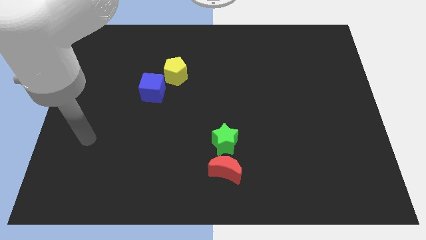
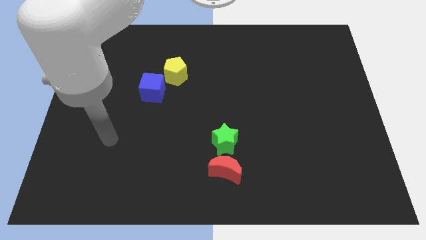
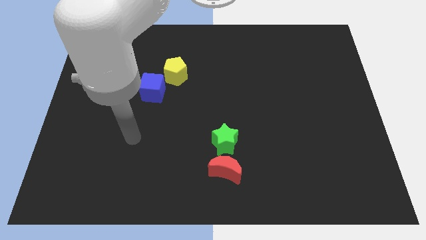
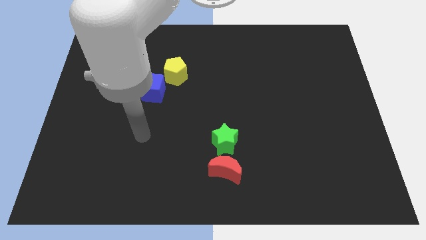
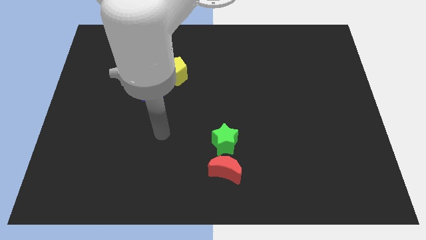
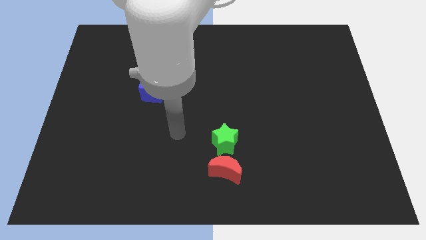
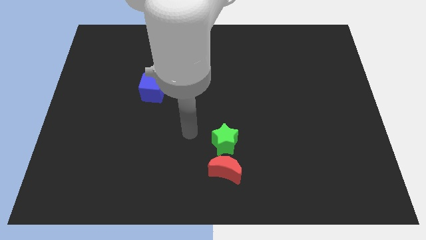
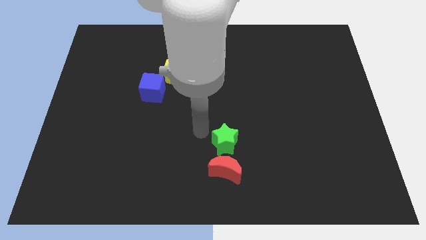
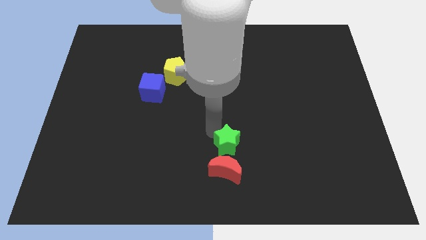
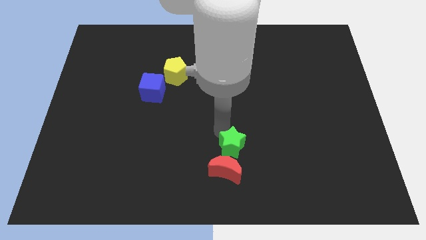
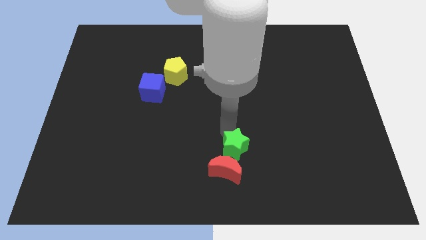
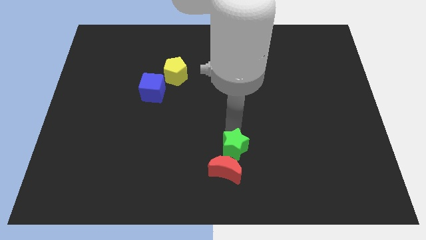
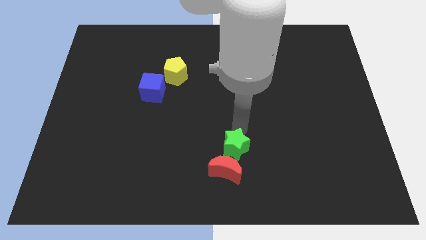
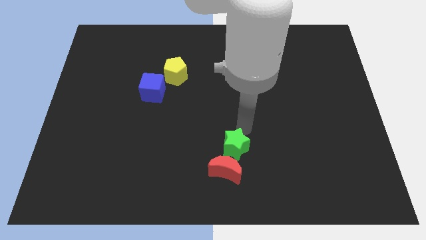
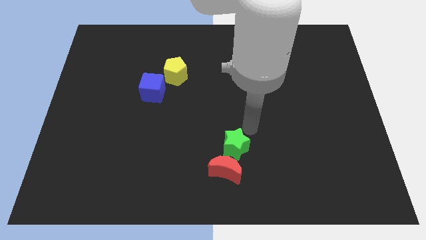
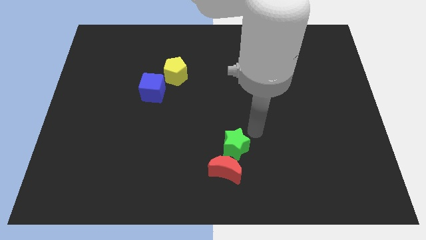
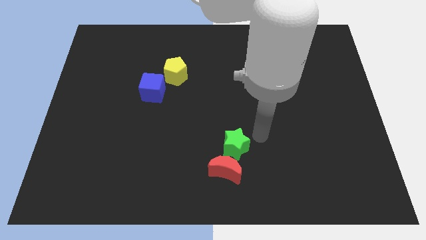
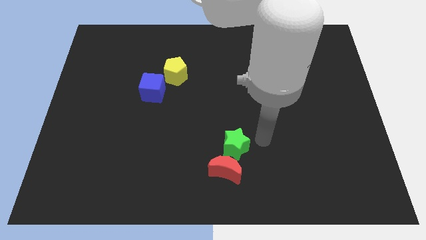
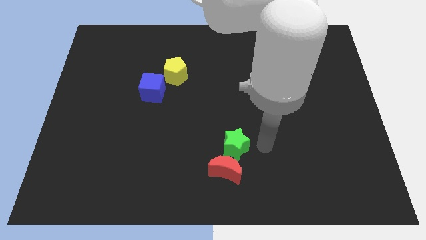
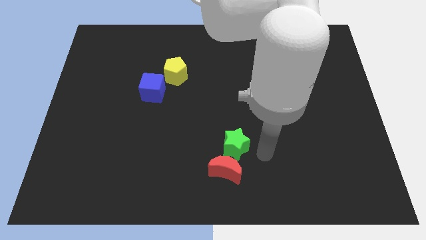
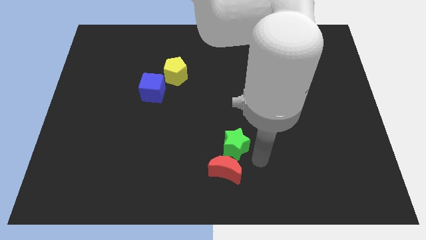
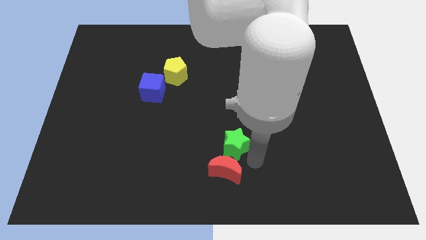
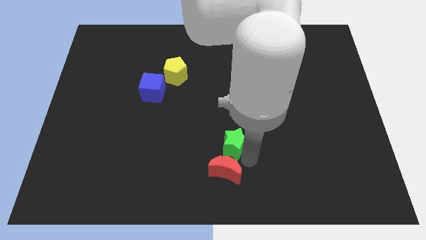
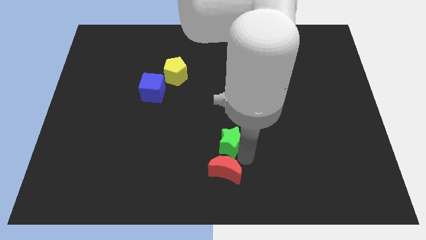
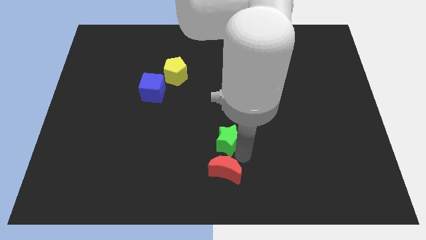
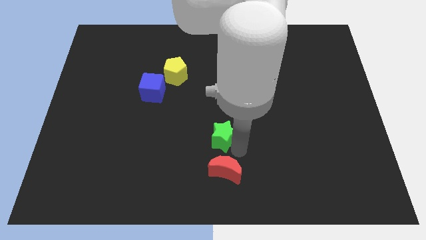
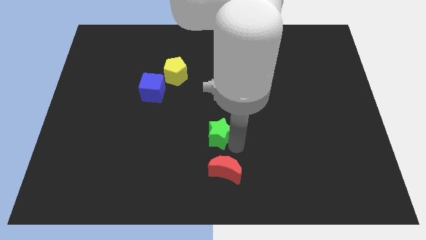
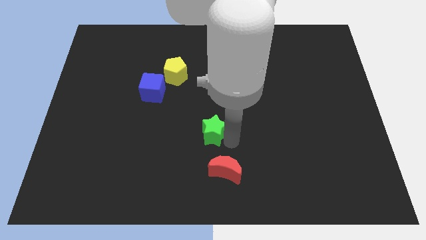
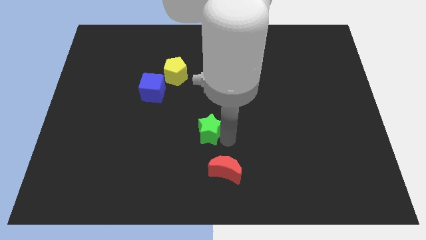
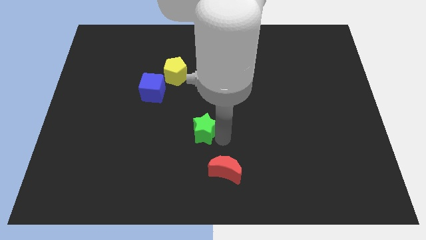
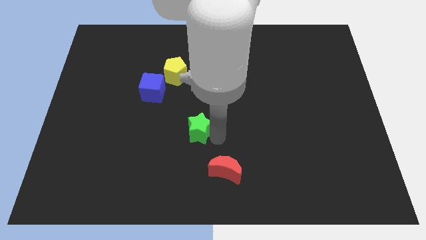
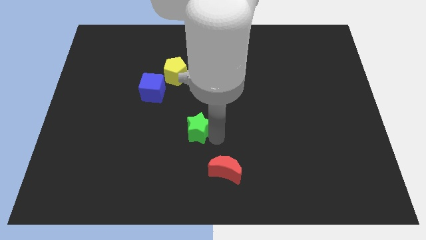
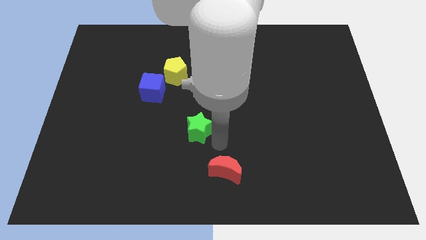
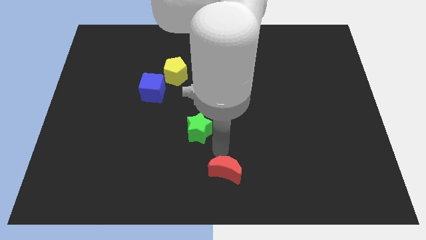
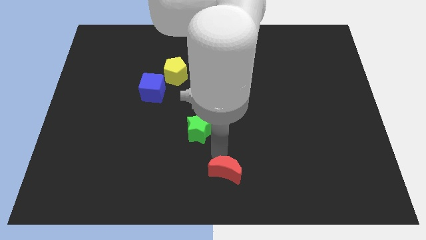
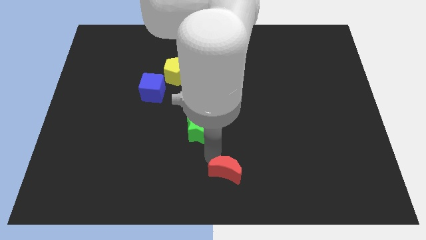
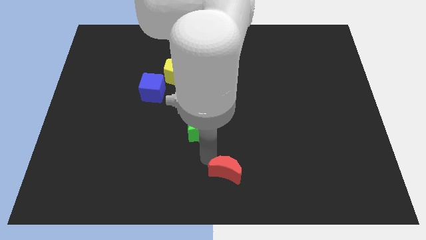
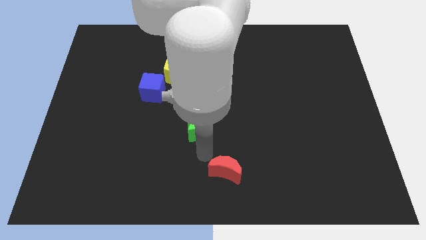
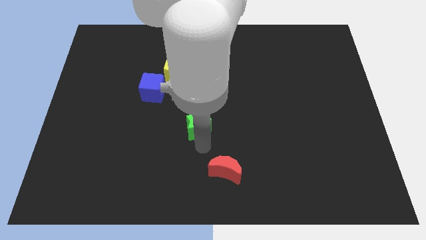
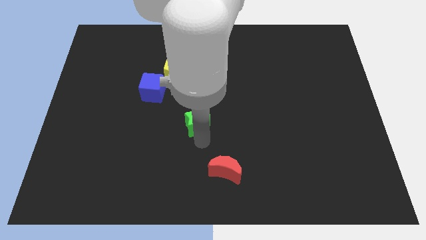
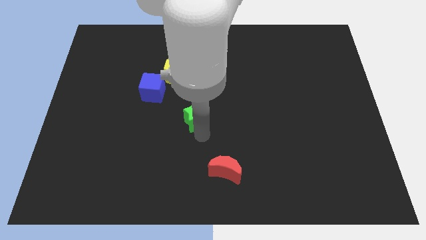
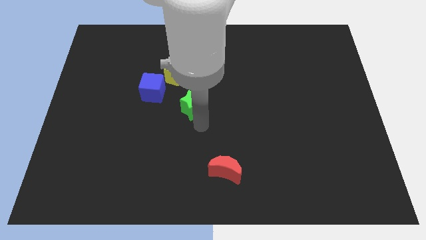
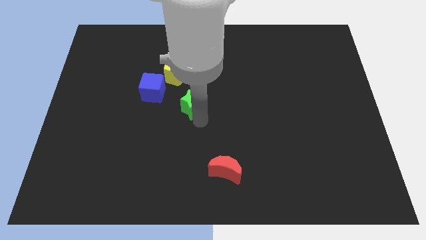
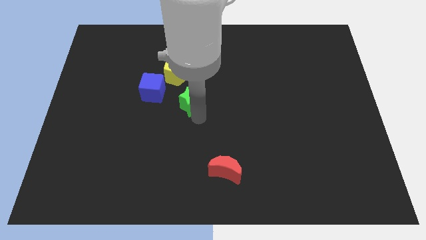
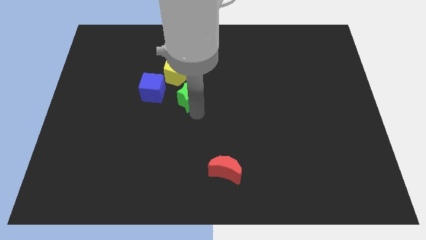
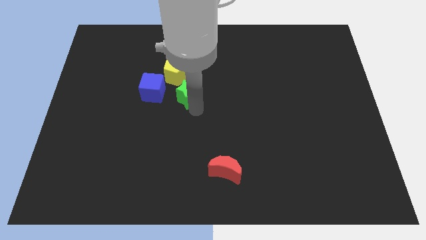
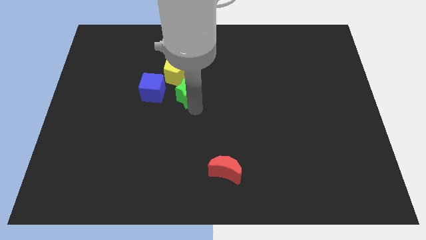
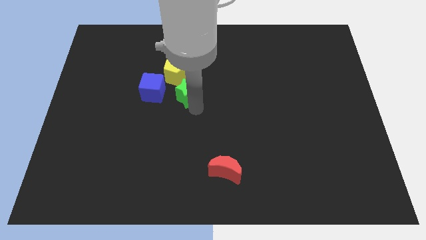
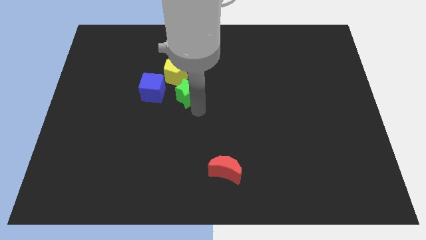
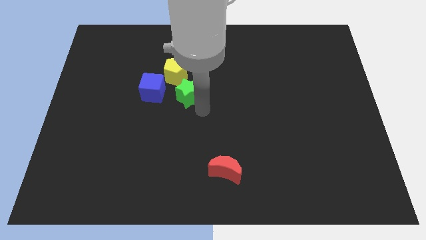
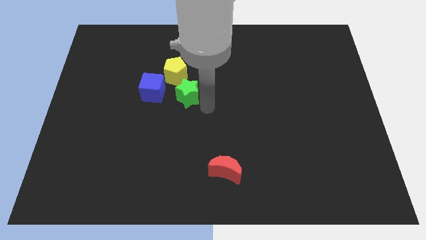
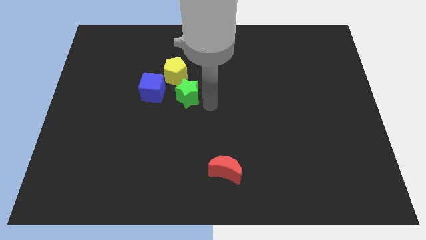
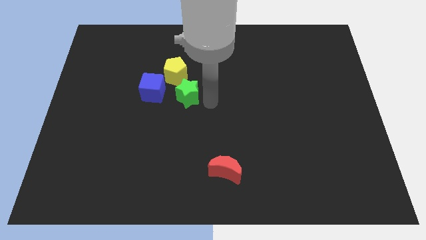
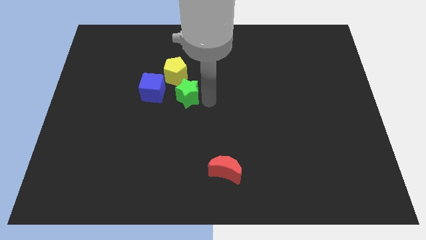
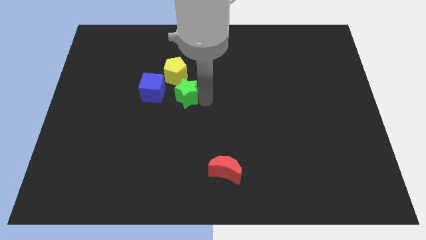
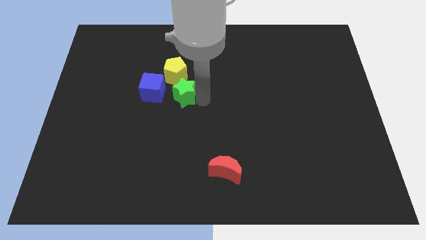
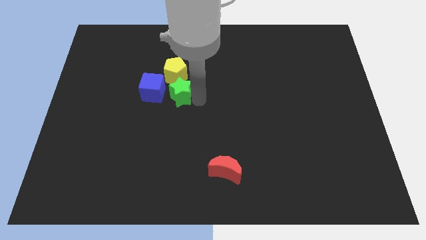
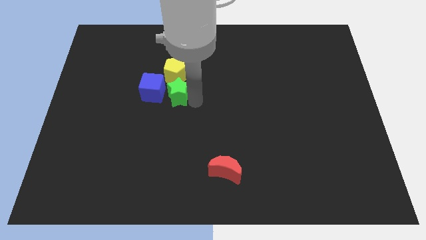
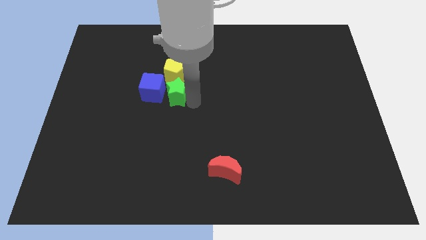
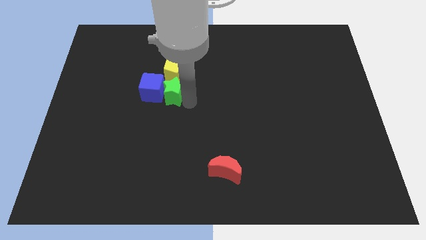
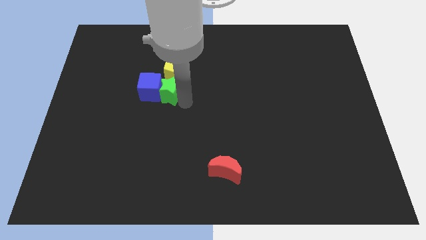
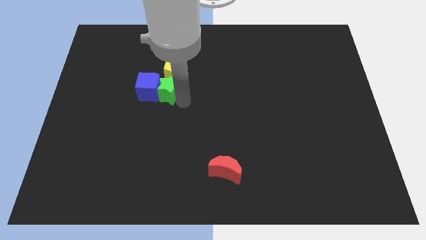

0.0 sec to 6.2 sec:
push the star to the cube

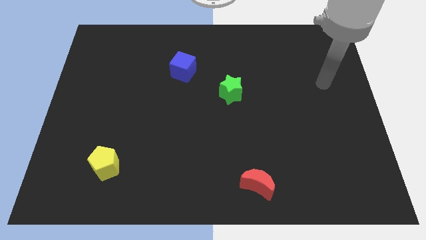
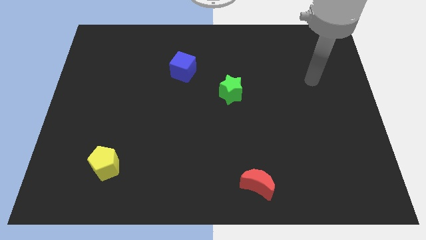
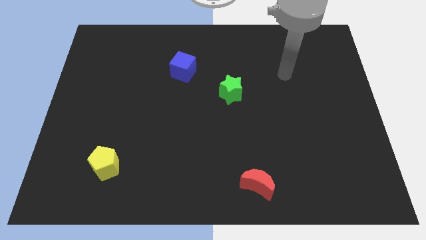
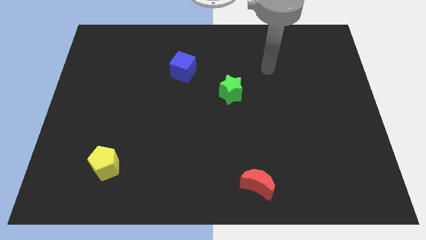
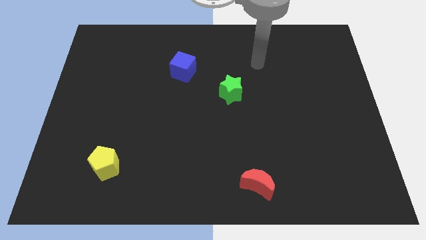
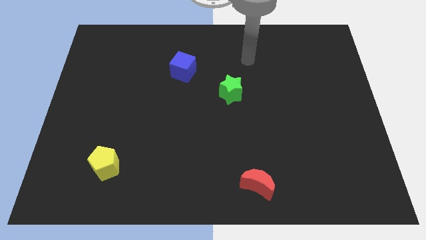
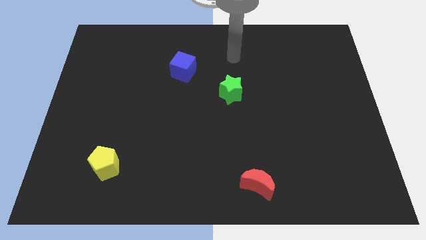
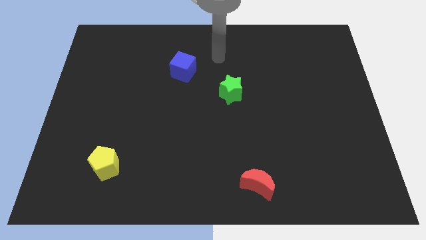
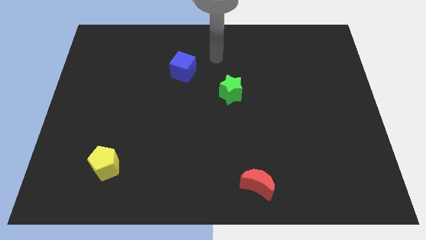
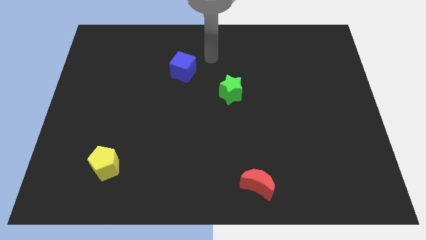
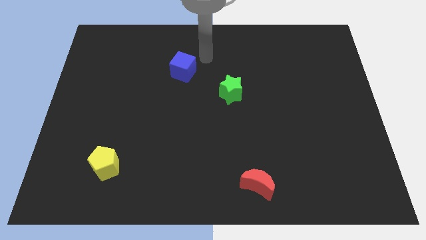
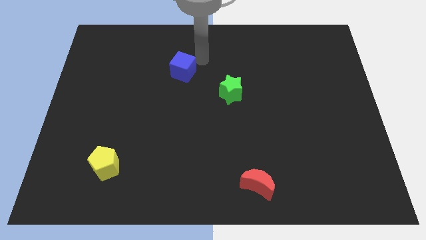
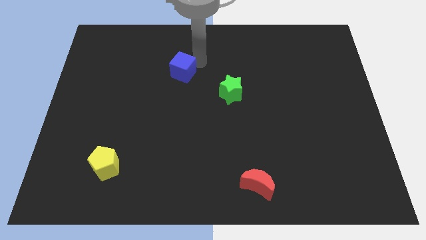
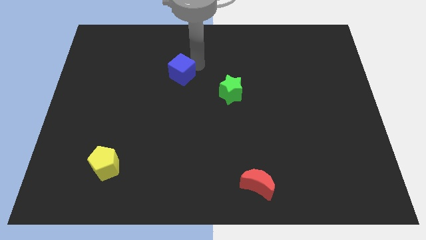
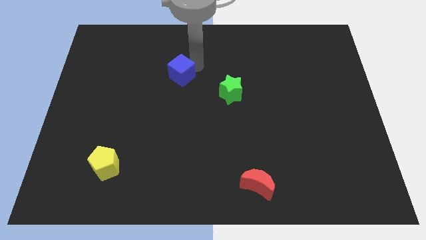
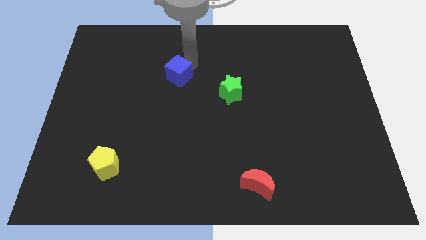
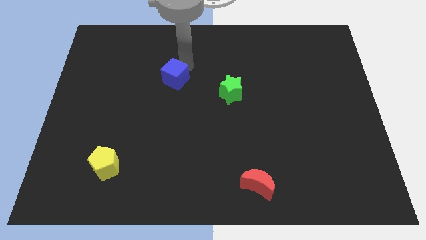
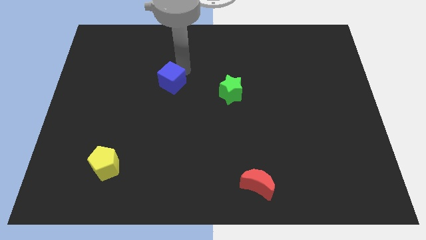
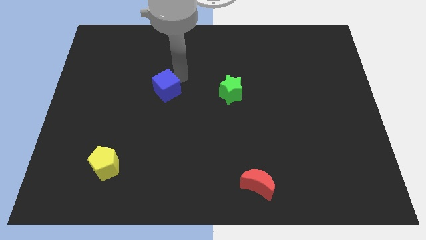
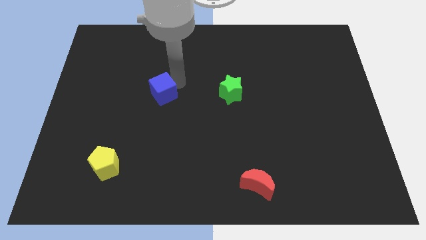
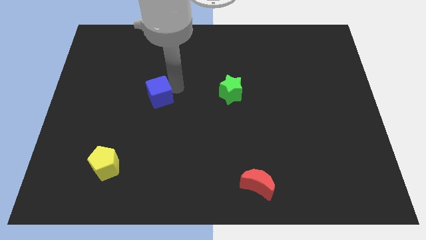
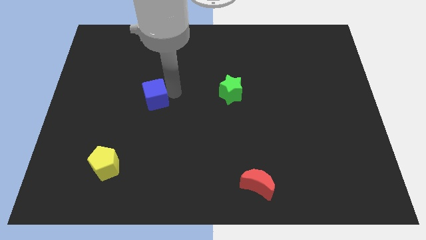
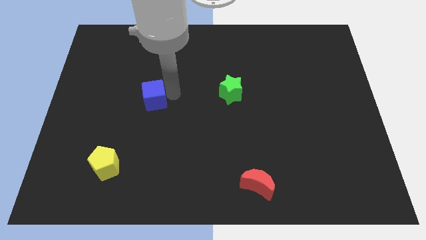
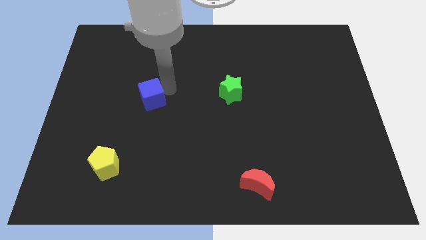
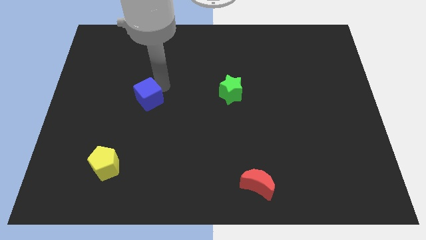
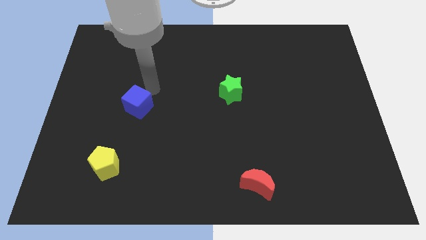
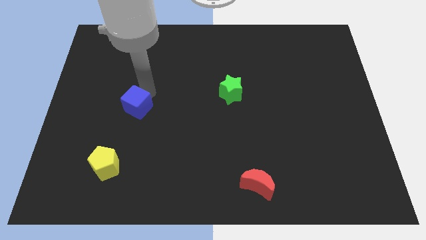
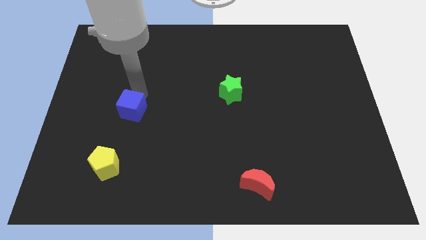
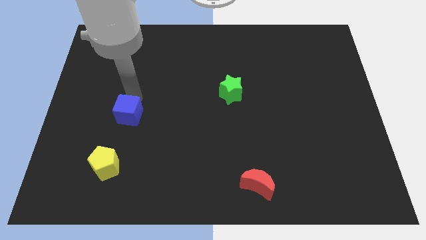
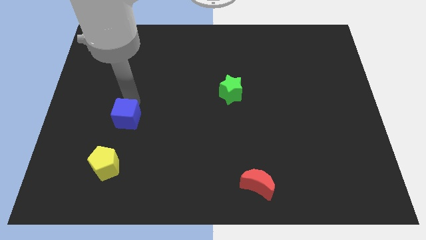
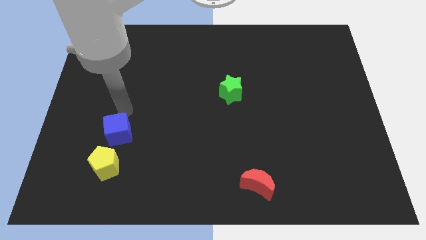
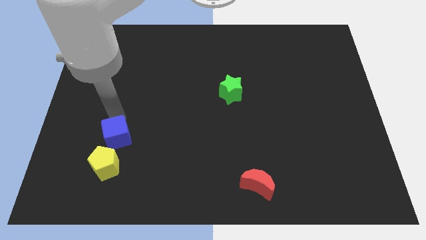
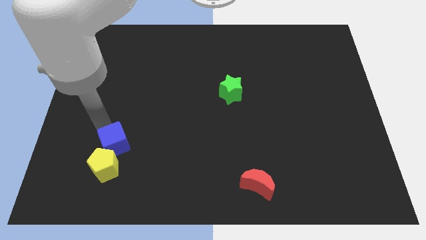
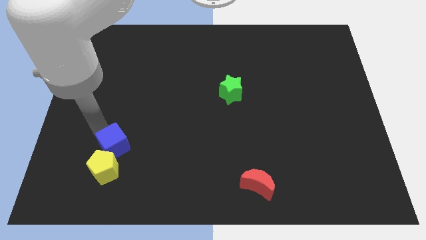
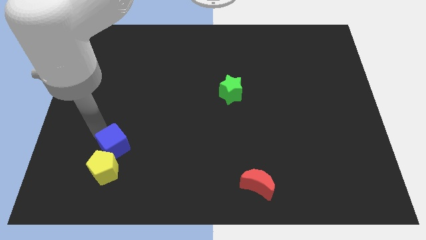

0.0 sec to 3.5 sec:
put the blue cube to the pentagon
